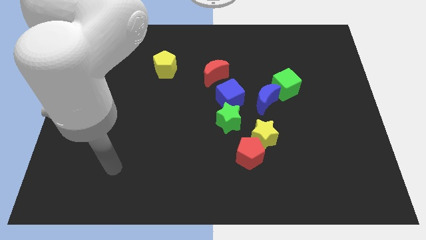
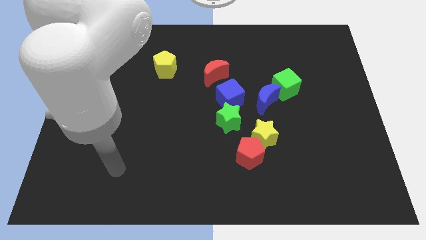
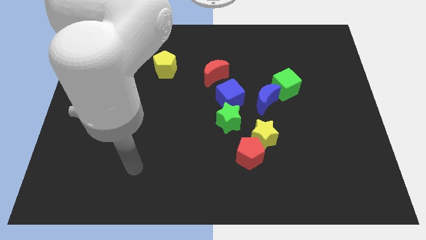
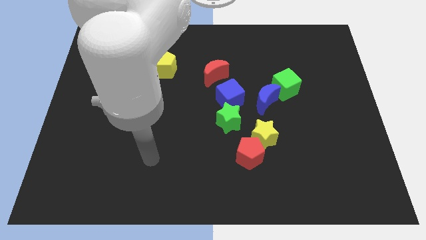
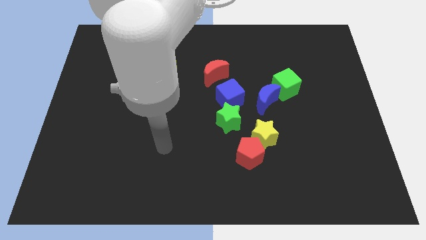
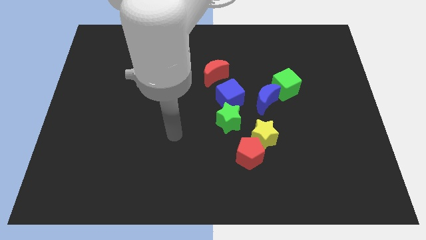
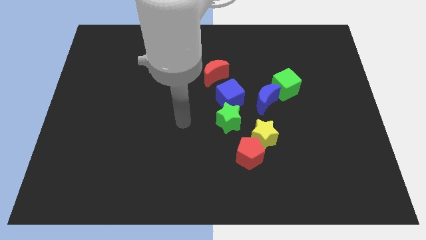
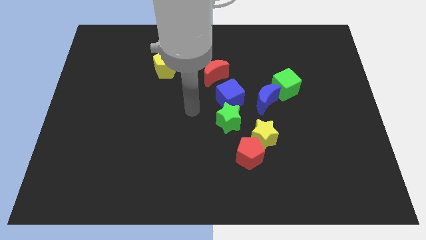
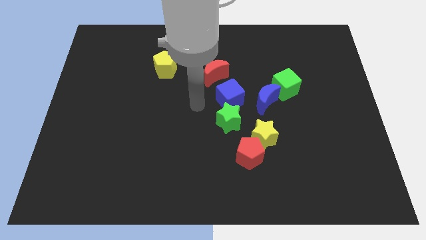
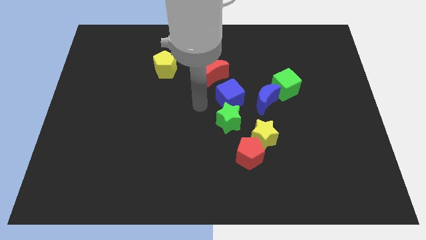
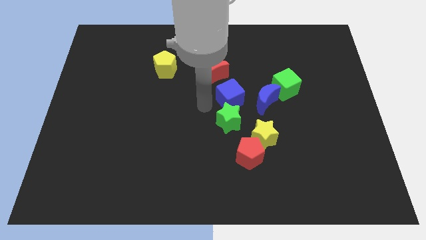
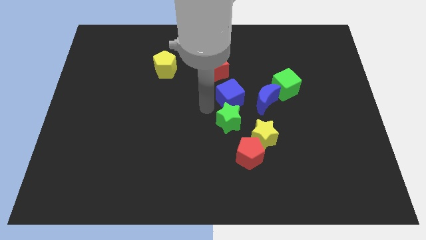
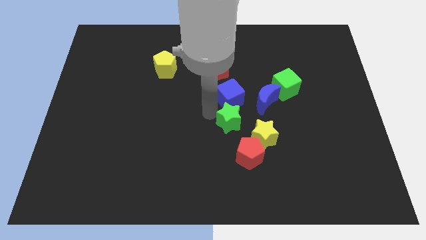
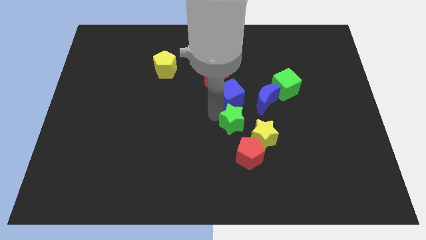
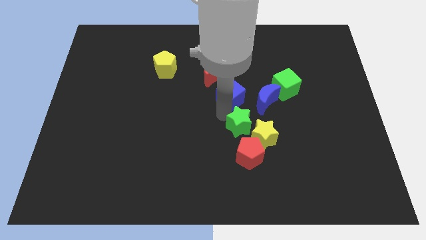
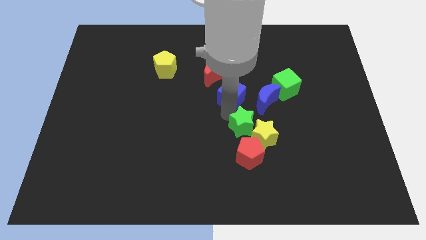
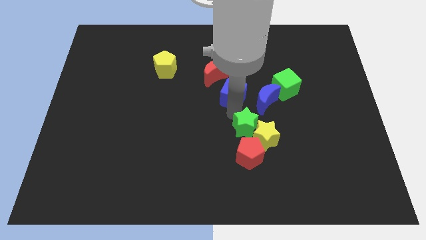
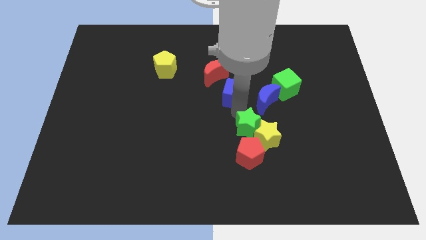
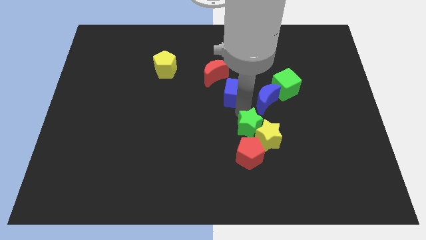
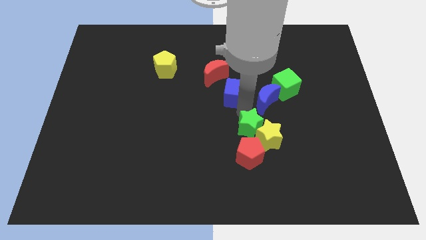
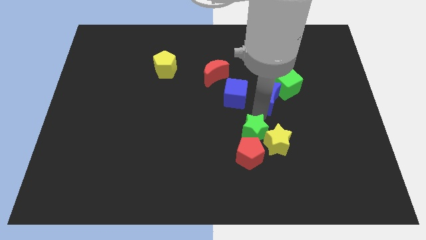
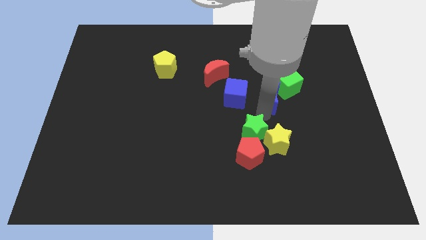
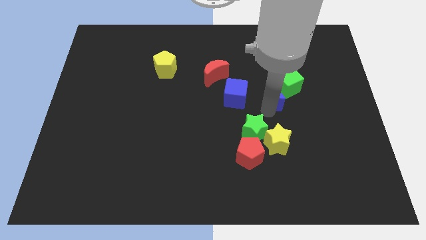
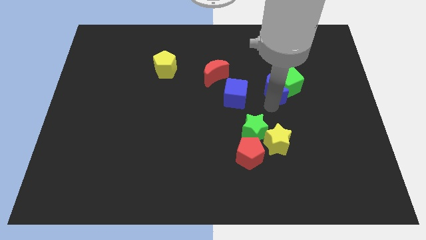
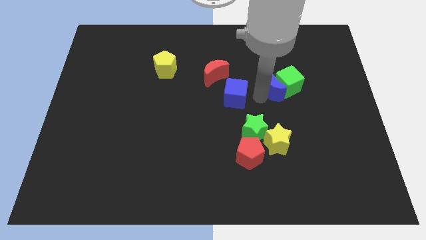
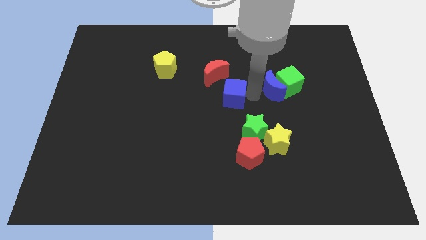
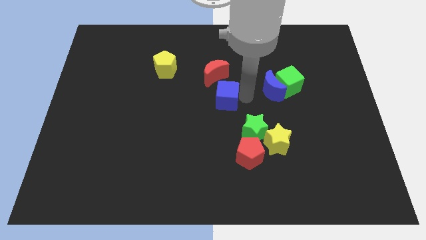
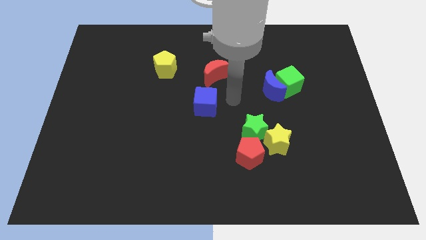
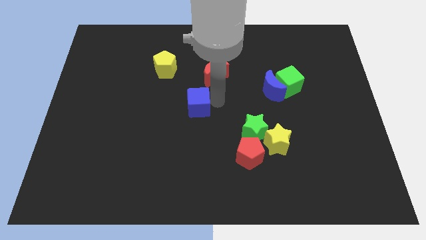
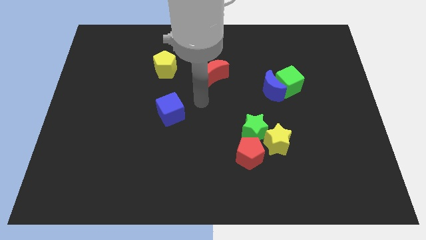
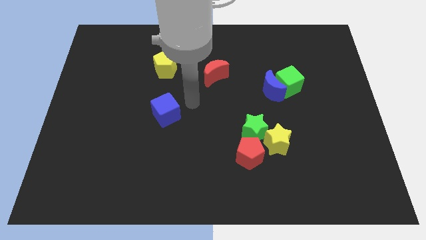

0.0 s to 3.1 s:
separate the blue cube from green star

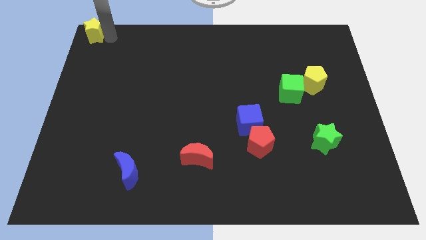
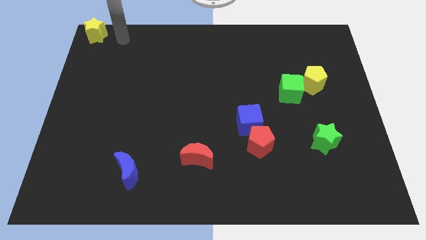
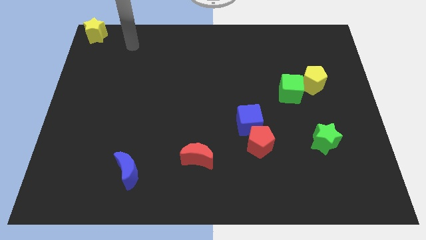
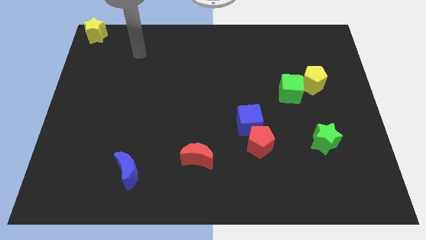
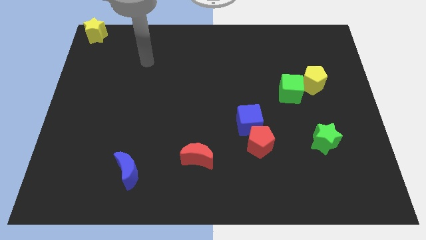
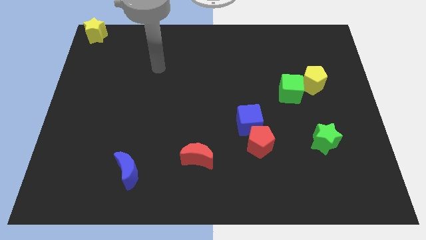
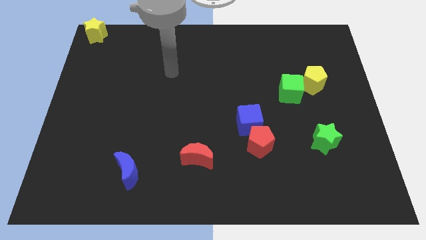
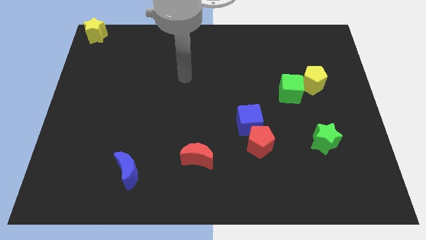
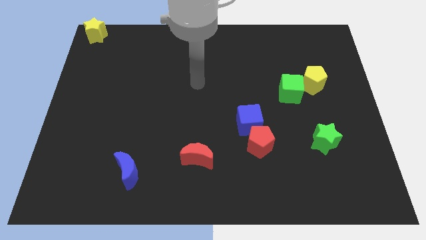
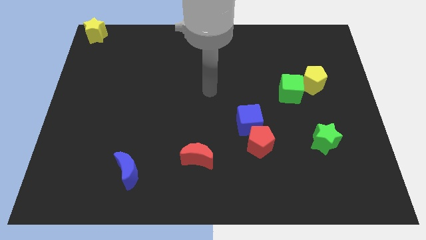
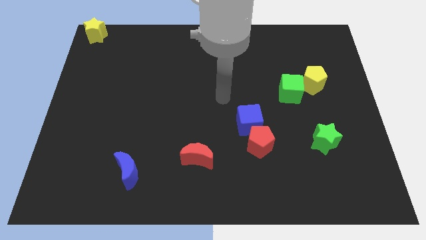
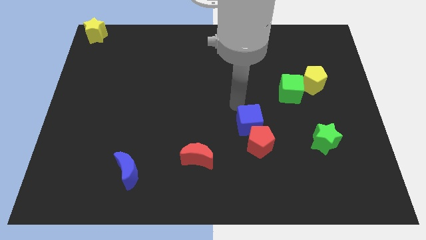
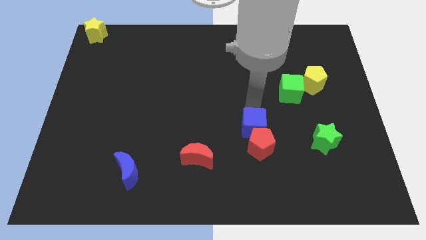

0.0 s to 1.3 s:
move your arm away from the yellow star

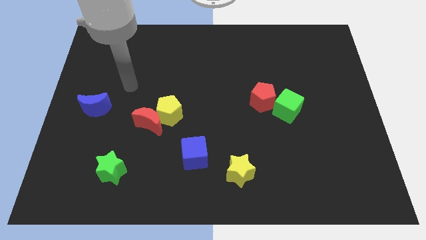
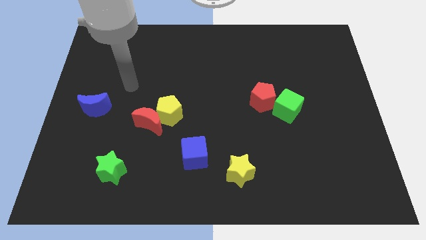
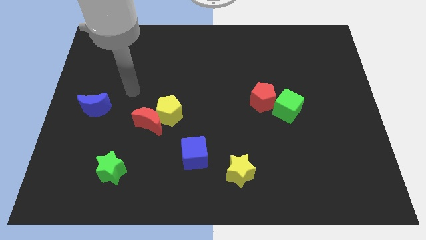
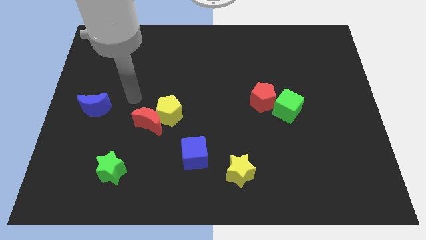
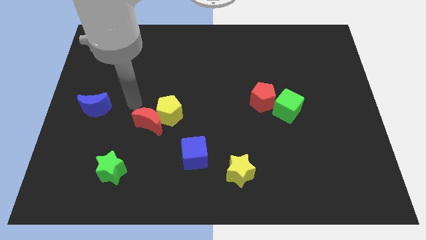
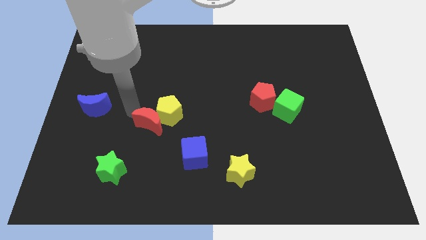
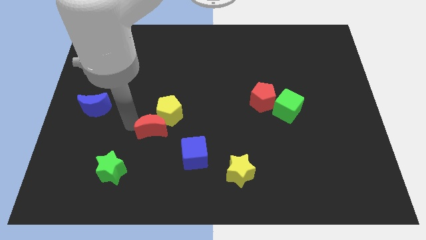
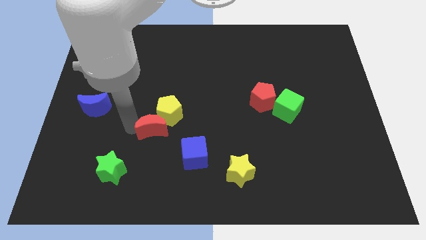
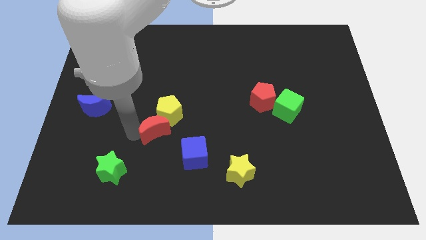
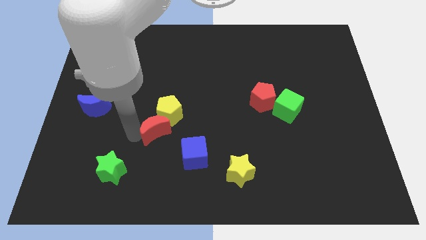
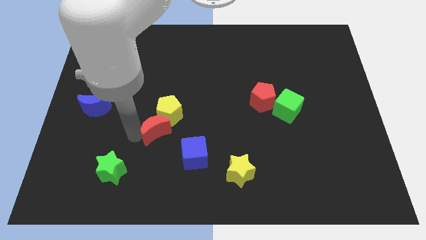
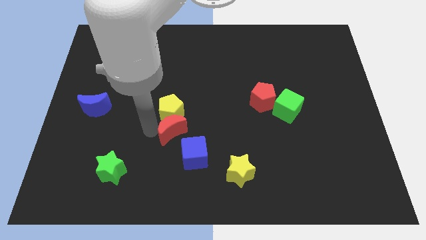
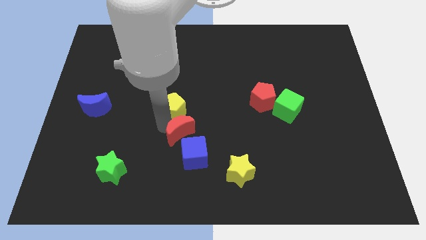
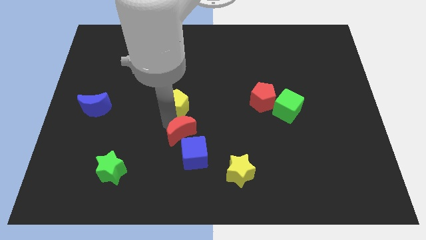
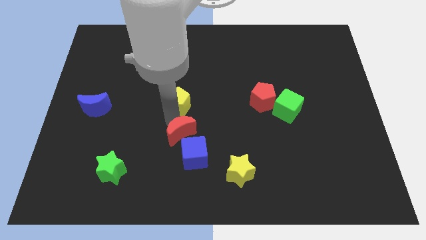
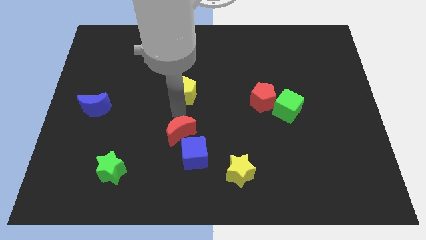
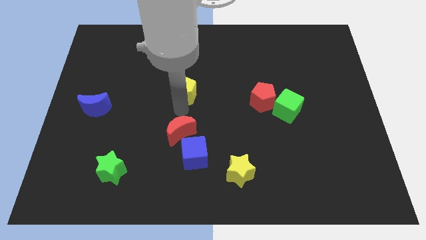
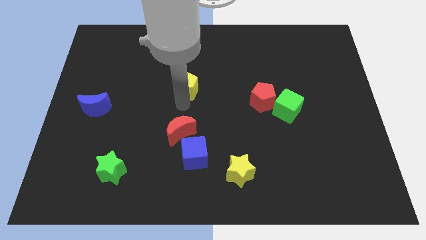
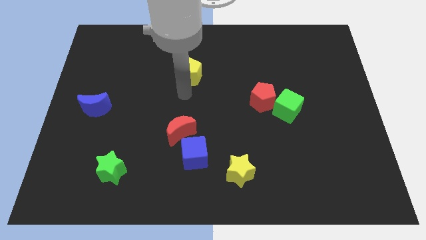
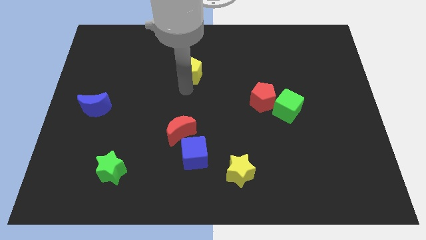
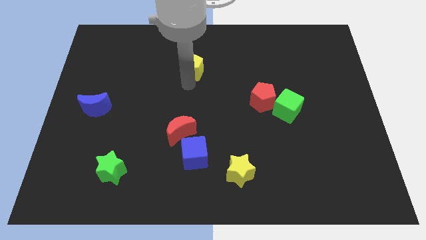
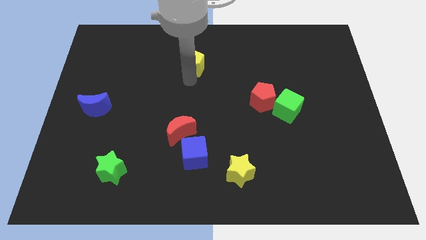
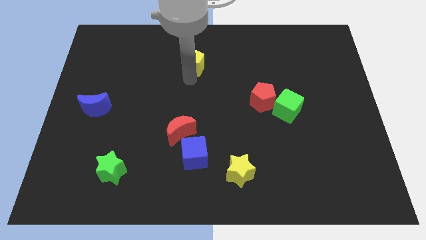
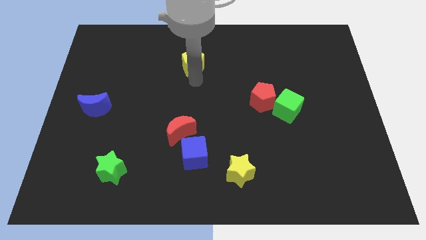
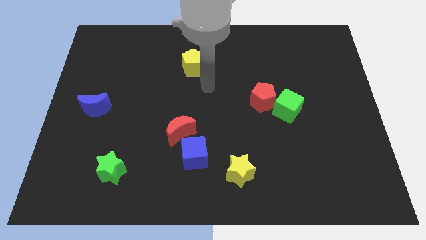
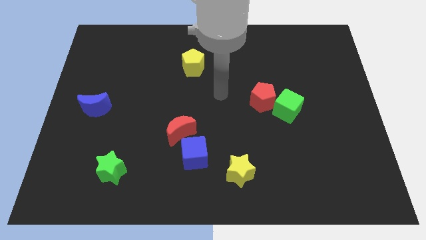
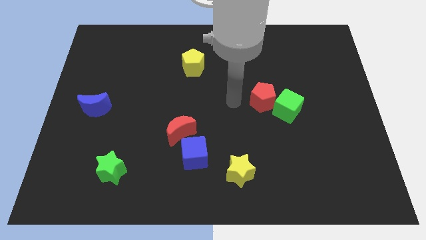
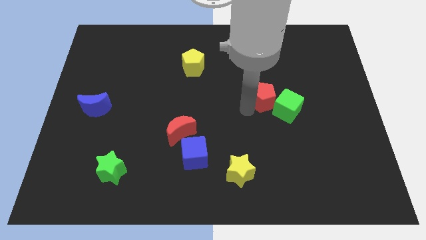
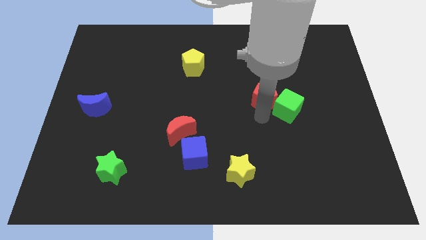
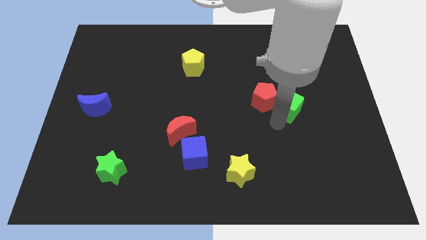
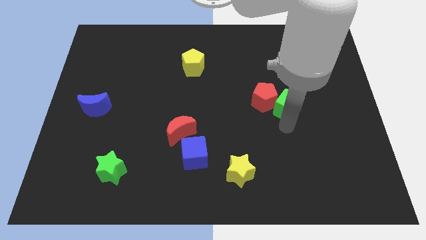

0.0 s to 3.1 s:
separate yellow pentagon from the red moon

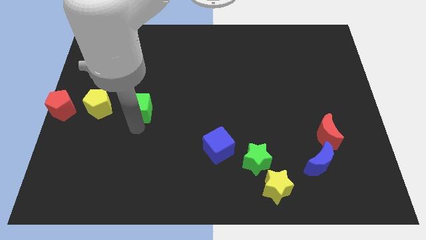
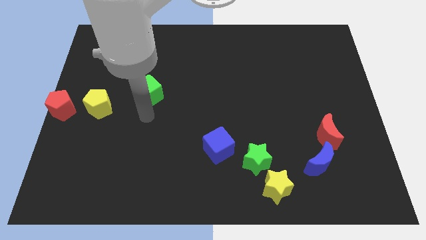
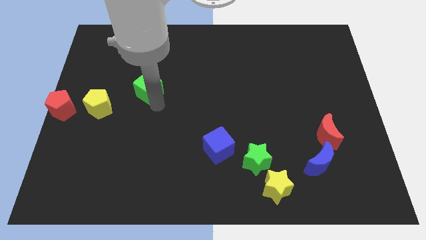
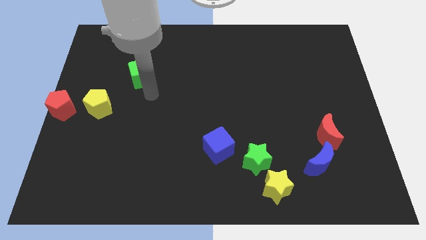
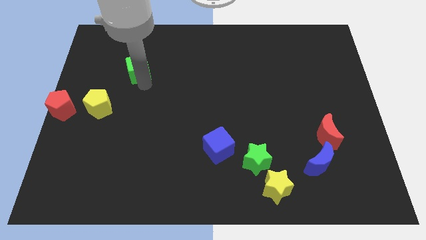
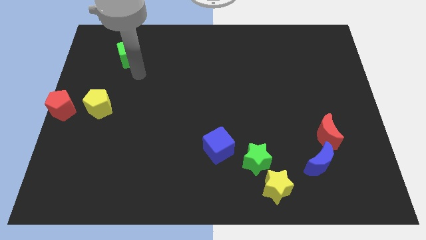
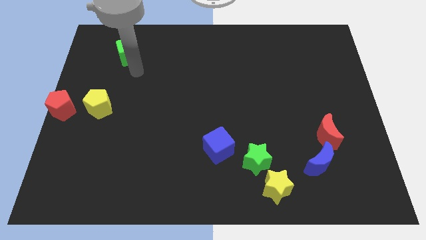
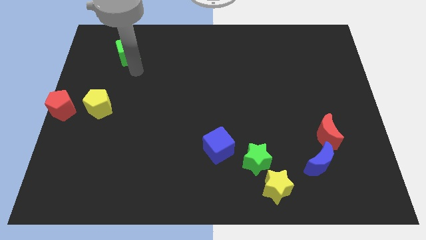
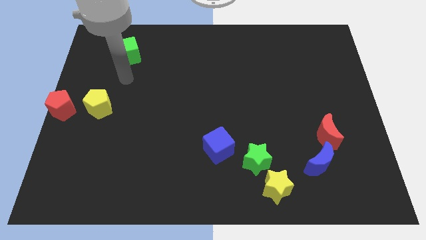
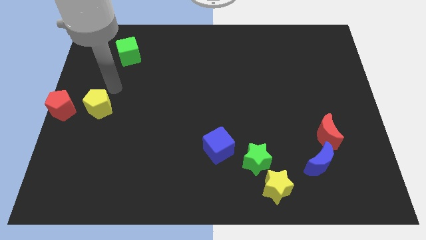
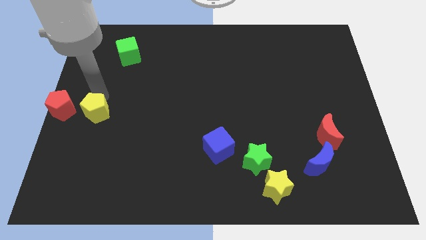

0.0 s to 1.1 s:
push the green cube toward the top left

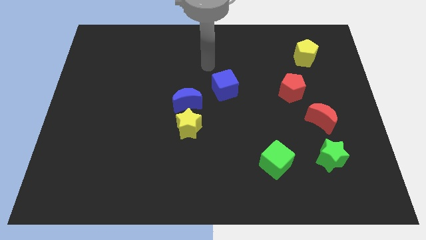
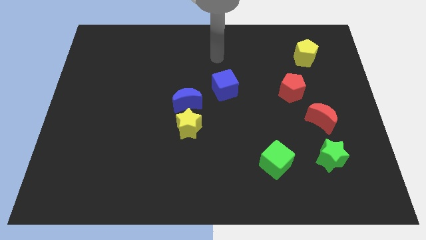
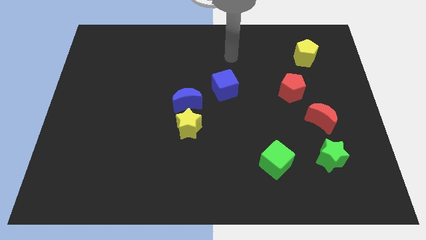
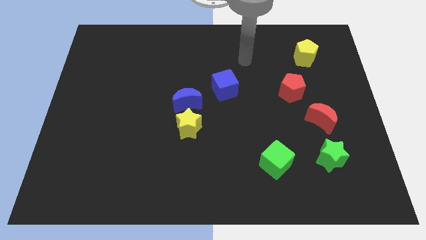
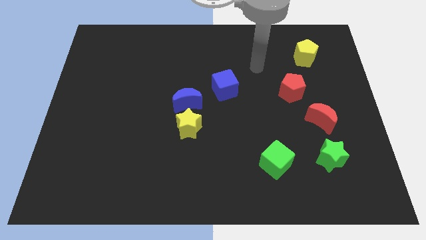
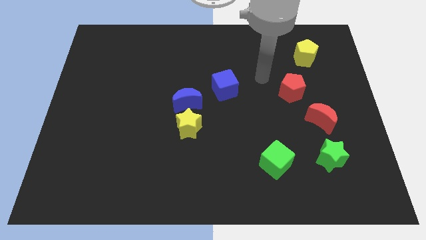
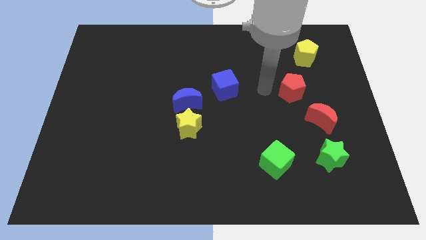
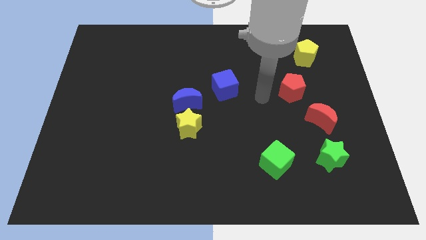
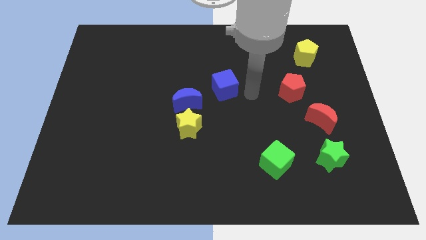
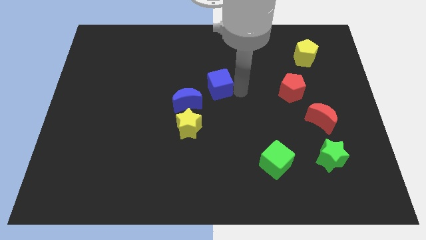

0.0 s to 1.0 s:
place your arm right to blue cube
